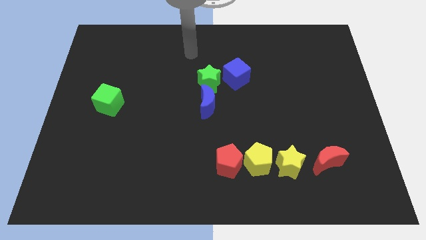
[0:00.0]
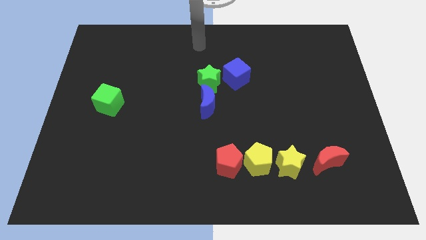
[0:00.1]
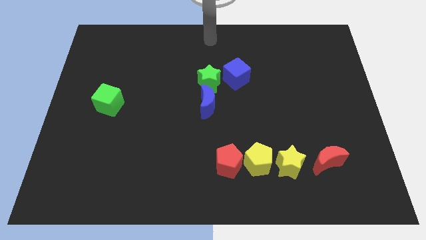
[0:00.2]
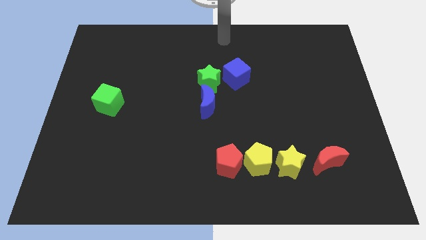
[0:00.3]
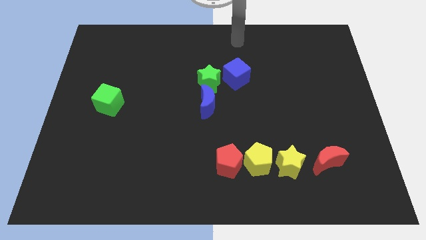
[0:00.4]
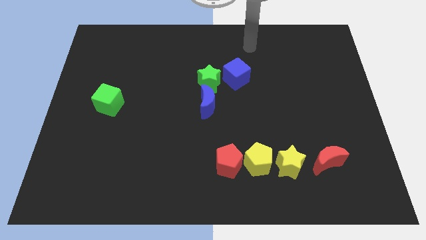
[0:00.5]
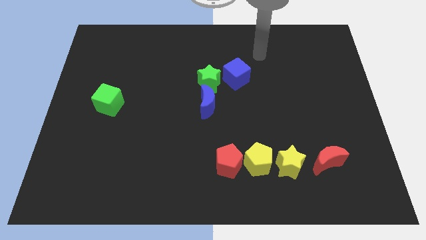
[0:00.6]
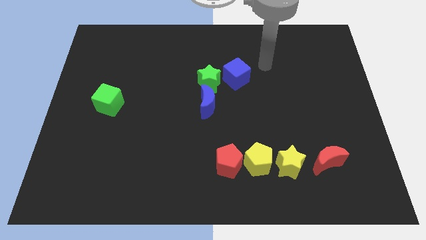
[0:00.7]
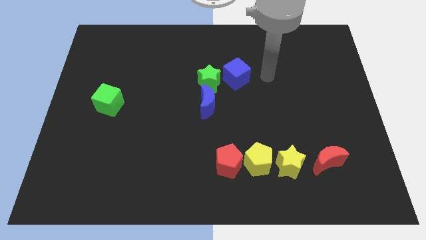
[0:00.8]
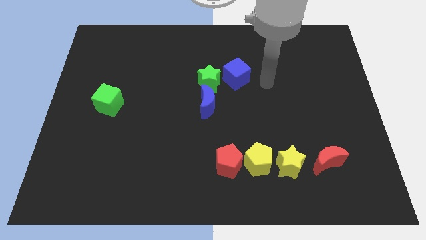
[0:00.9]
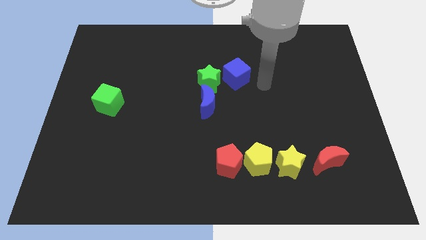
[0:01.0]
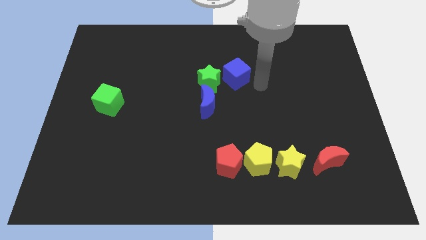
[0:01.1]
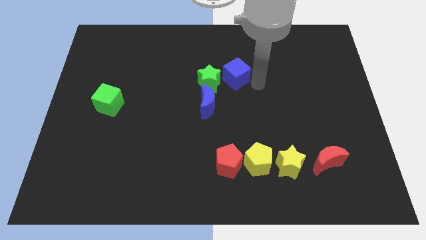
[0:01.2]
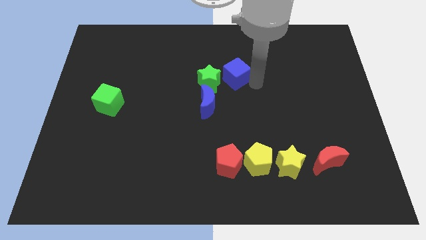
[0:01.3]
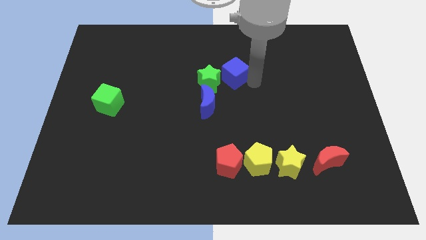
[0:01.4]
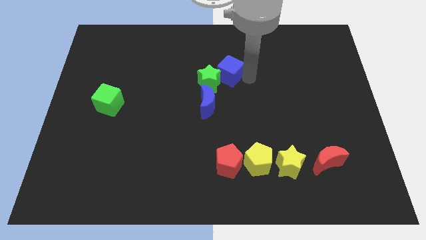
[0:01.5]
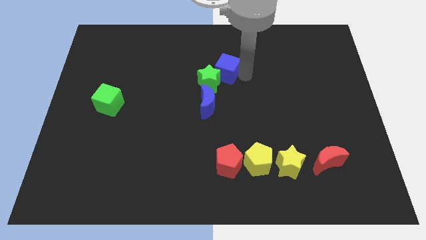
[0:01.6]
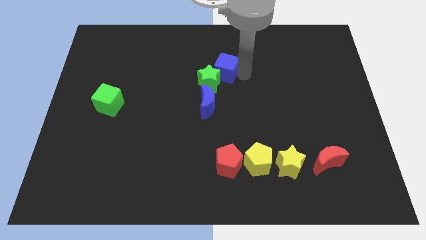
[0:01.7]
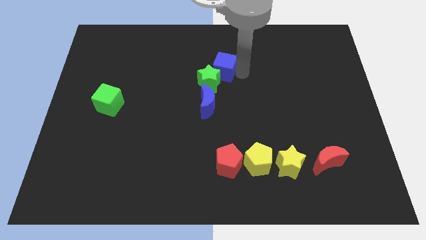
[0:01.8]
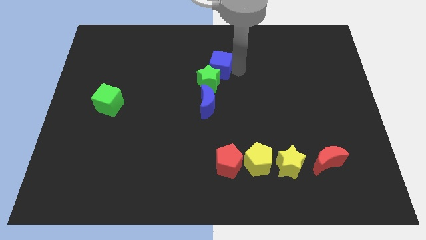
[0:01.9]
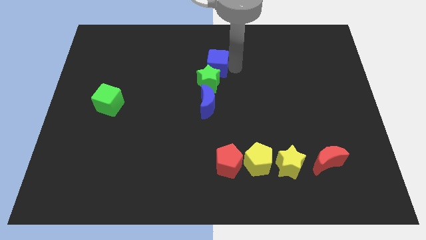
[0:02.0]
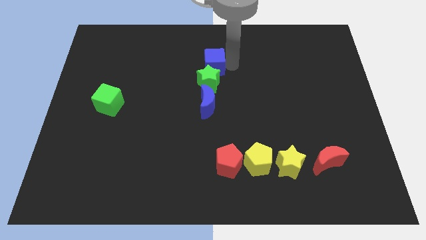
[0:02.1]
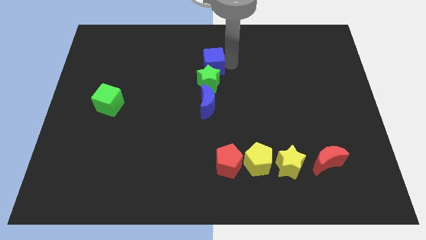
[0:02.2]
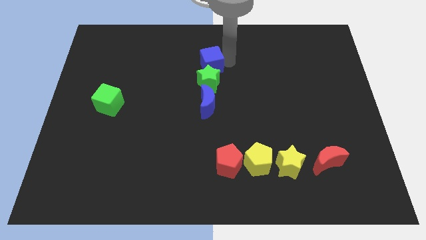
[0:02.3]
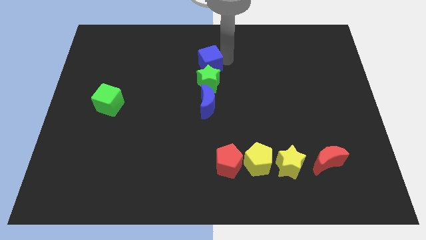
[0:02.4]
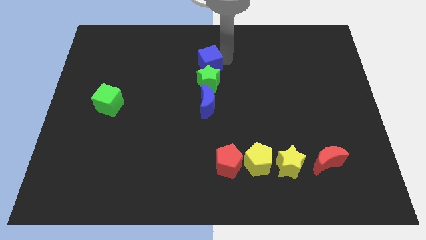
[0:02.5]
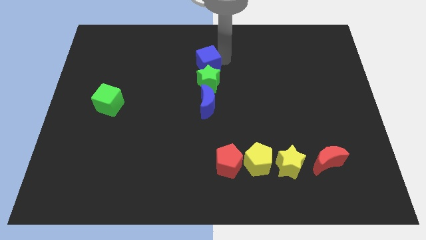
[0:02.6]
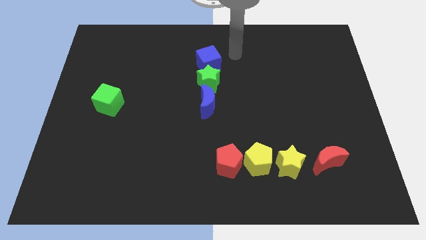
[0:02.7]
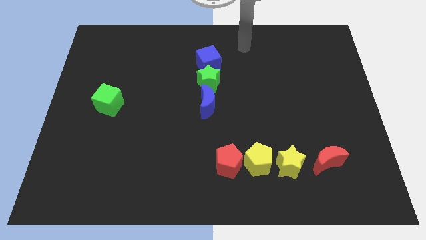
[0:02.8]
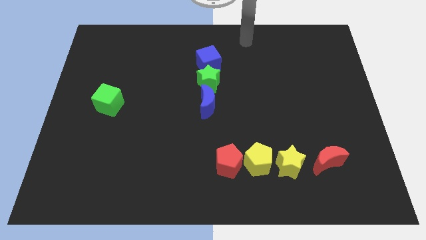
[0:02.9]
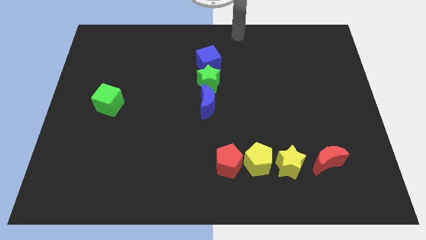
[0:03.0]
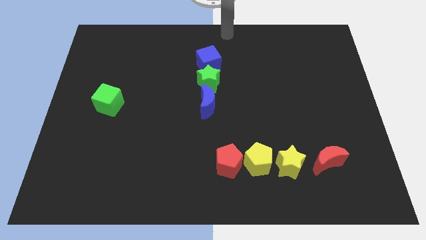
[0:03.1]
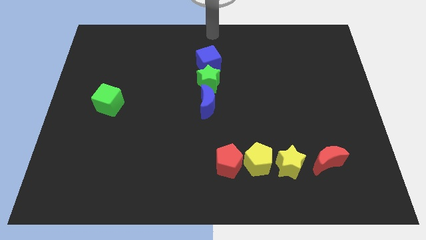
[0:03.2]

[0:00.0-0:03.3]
move the blue cube above the green star

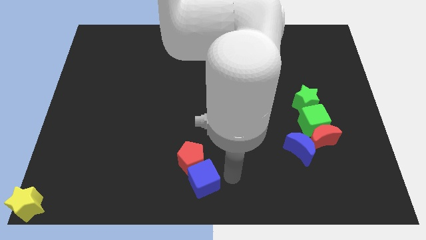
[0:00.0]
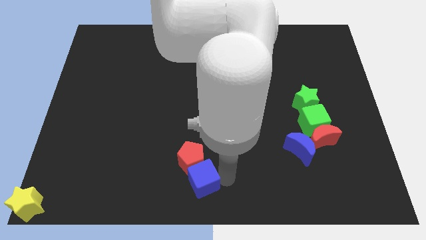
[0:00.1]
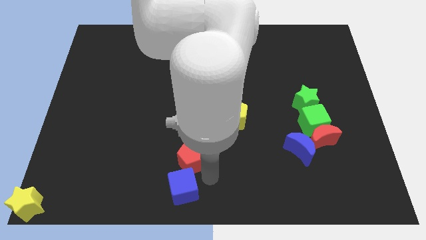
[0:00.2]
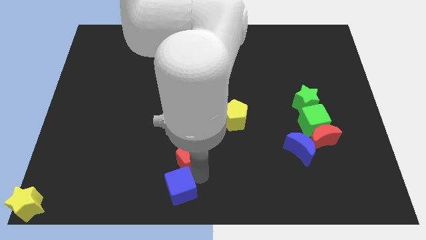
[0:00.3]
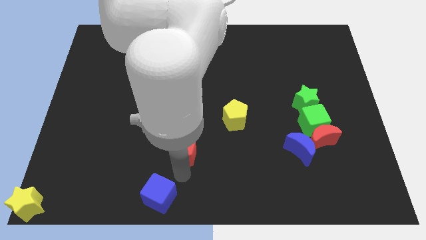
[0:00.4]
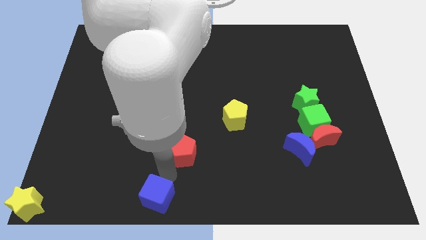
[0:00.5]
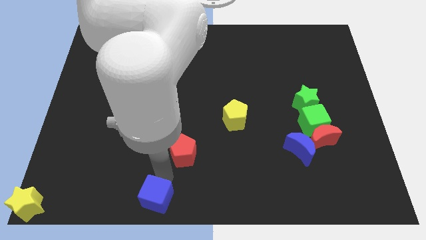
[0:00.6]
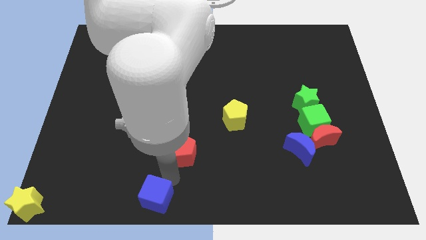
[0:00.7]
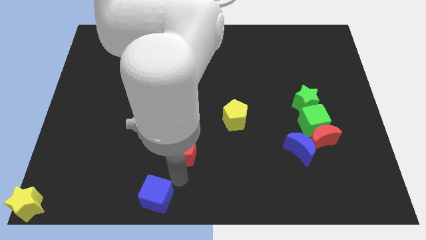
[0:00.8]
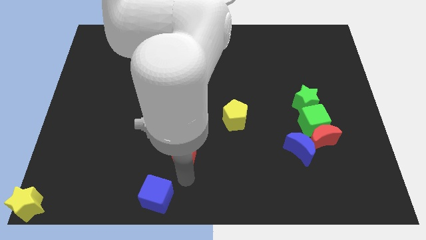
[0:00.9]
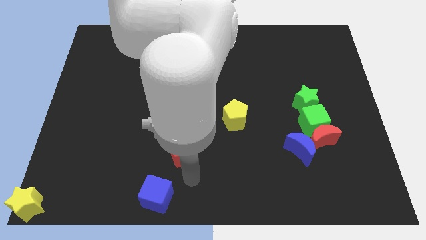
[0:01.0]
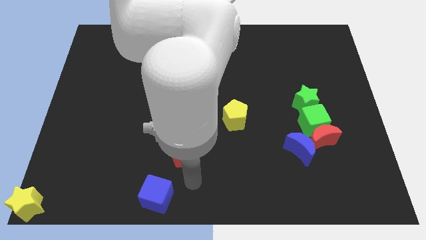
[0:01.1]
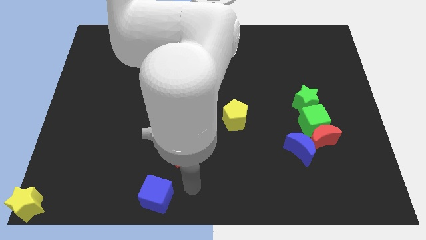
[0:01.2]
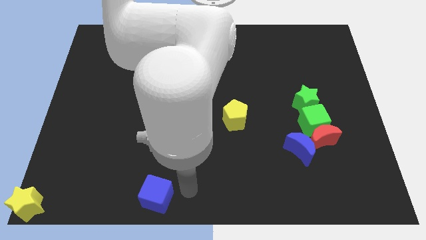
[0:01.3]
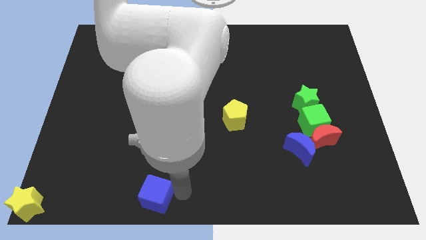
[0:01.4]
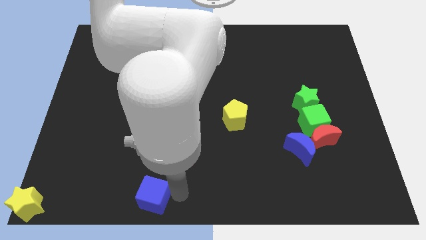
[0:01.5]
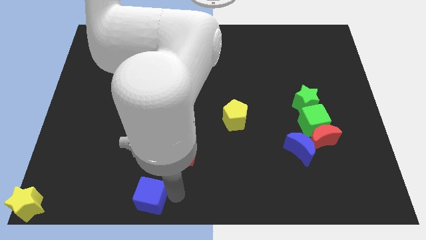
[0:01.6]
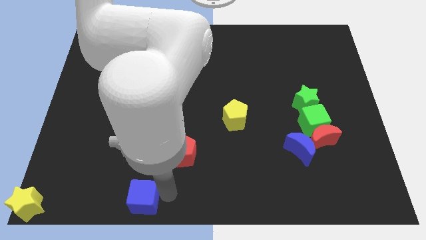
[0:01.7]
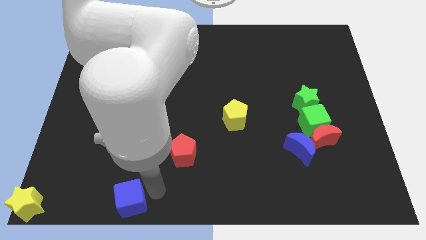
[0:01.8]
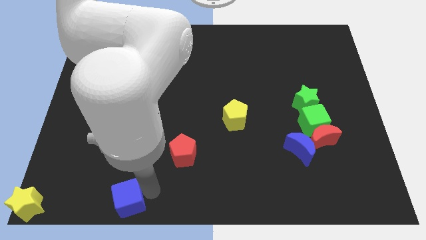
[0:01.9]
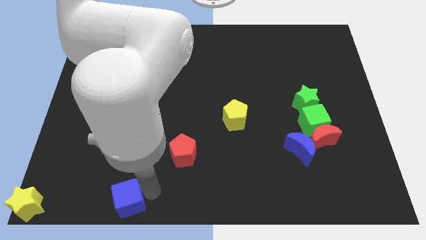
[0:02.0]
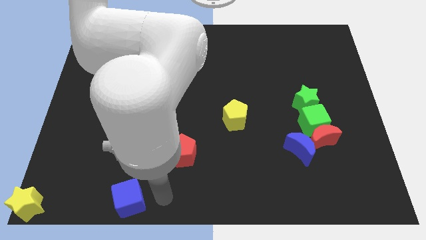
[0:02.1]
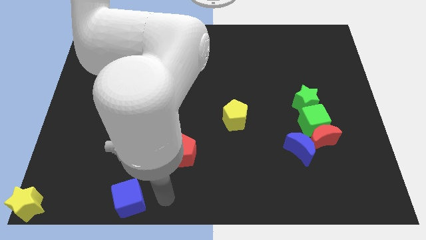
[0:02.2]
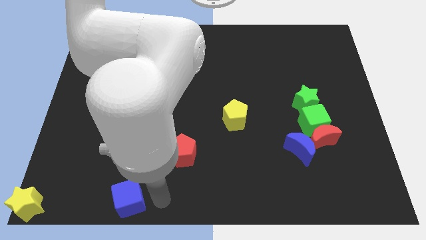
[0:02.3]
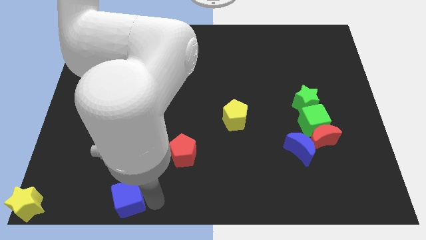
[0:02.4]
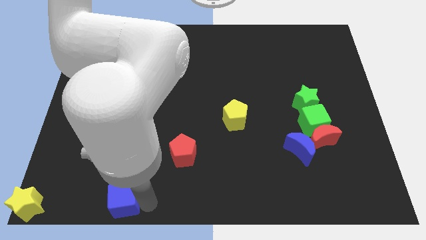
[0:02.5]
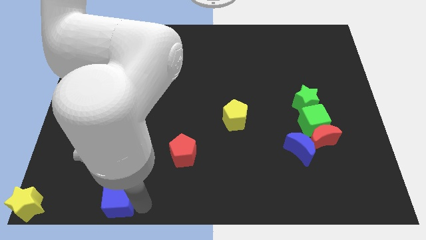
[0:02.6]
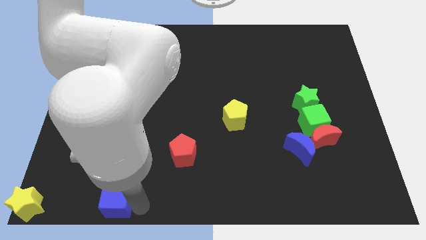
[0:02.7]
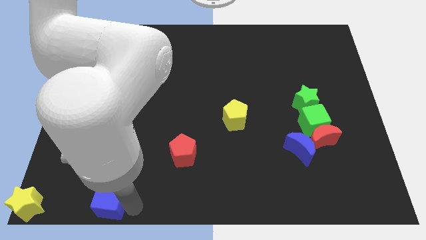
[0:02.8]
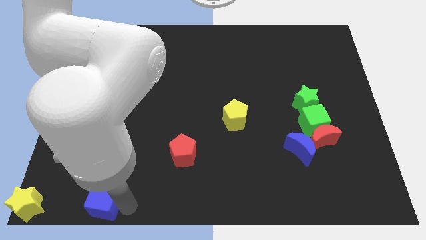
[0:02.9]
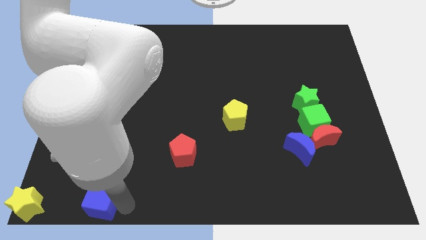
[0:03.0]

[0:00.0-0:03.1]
push the blue cube to the bottom left of the board

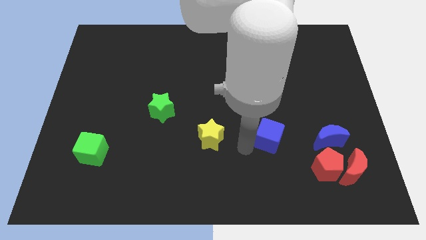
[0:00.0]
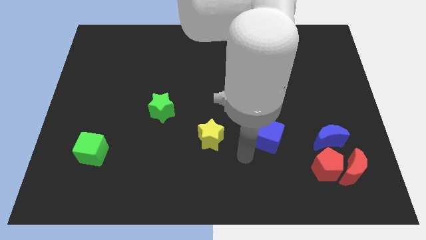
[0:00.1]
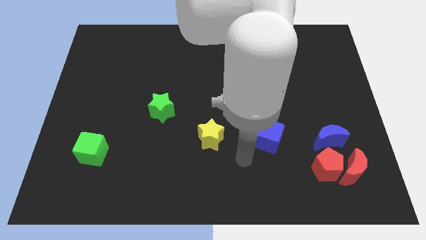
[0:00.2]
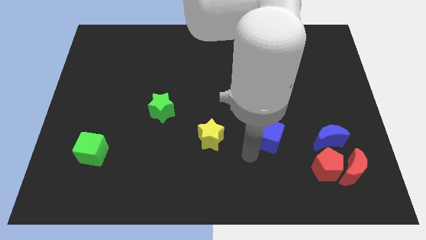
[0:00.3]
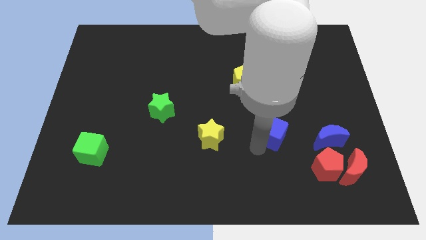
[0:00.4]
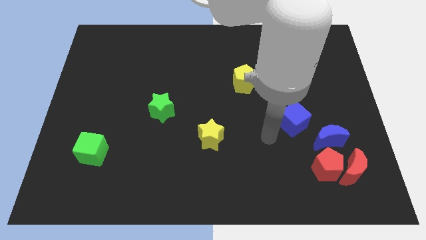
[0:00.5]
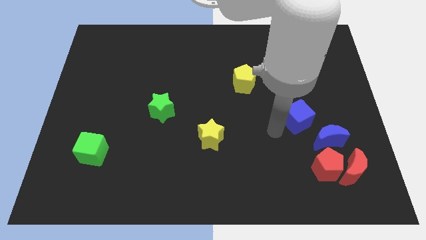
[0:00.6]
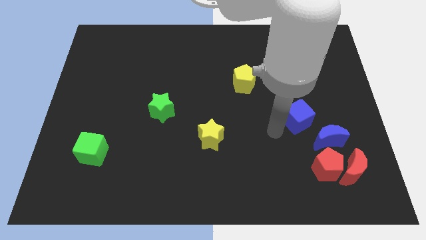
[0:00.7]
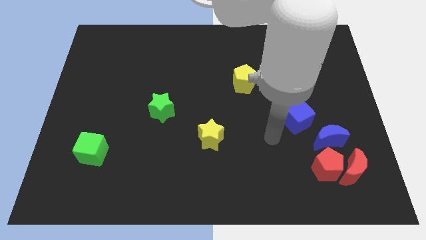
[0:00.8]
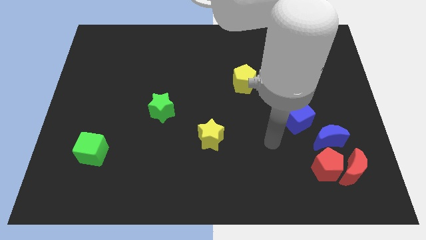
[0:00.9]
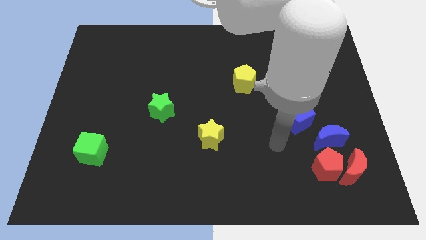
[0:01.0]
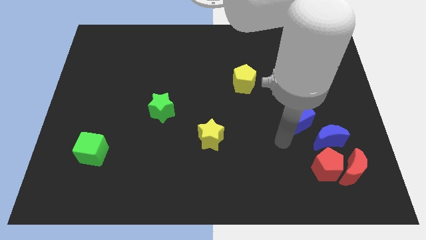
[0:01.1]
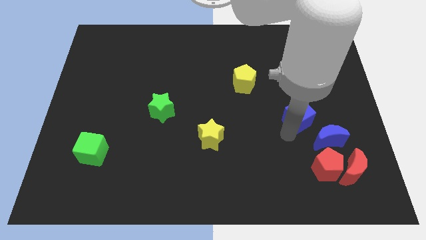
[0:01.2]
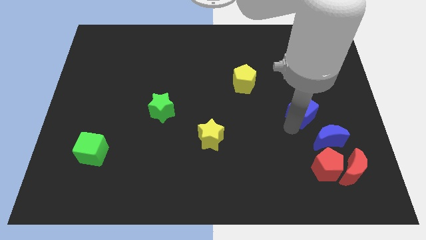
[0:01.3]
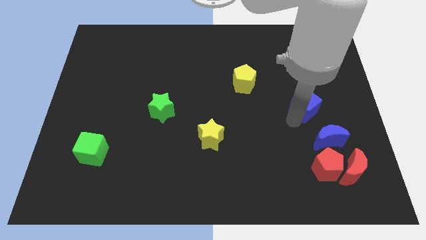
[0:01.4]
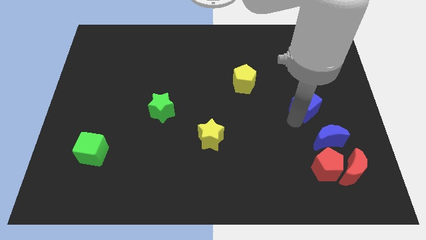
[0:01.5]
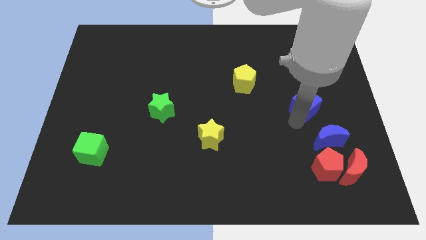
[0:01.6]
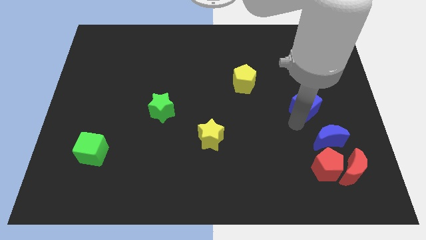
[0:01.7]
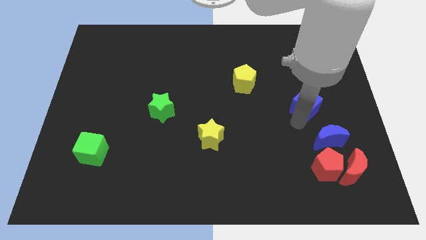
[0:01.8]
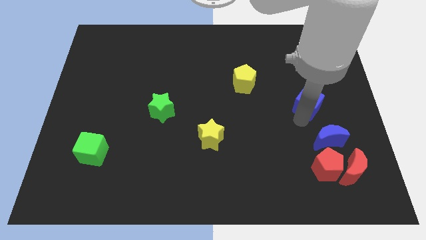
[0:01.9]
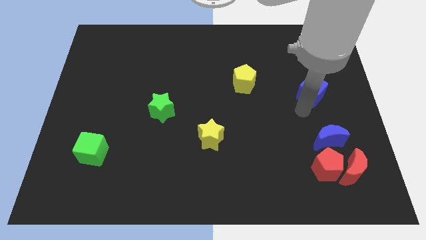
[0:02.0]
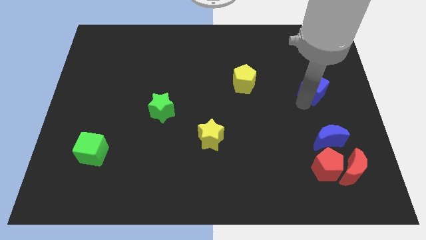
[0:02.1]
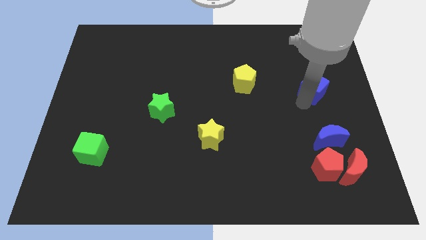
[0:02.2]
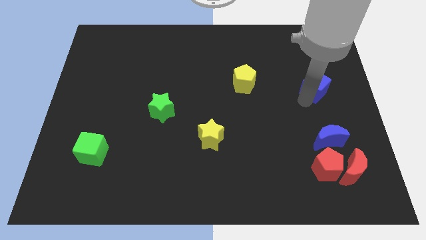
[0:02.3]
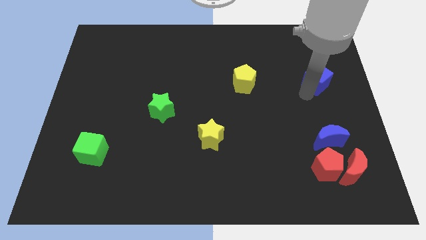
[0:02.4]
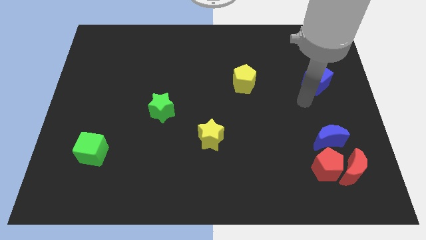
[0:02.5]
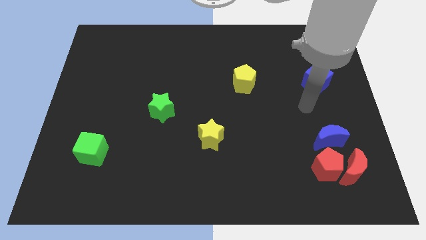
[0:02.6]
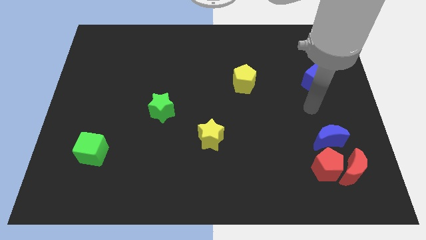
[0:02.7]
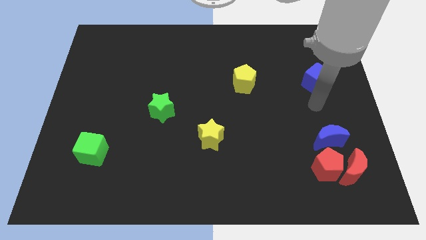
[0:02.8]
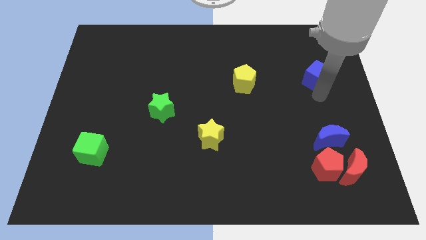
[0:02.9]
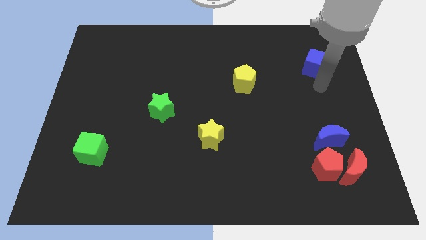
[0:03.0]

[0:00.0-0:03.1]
push the blue cube towards the top right corner of the board
